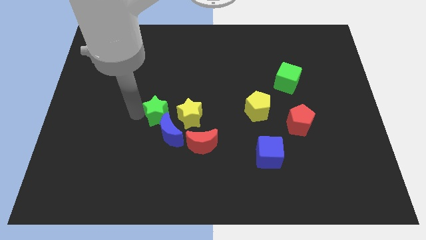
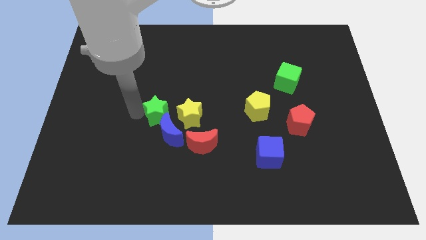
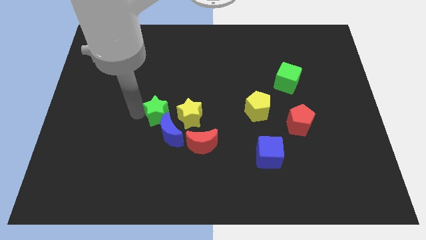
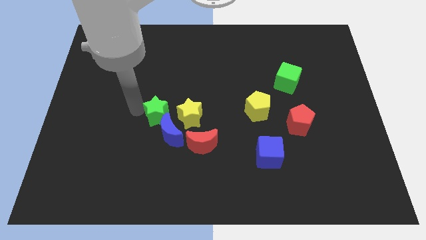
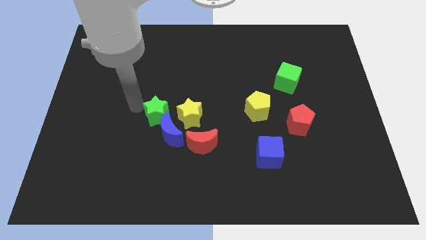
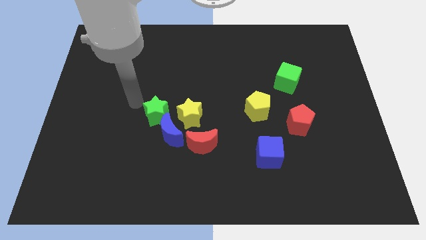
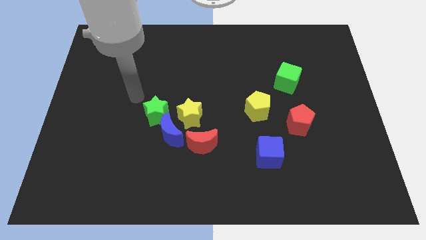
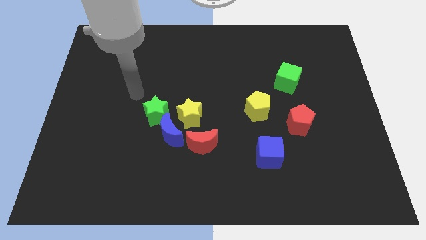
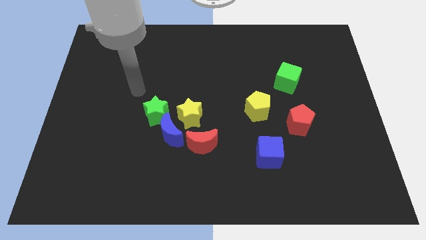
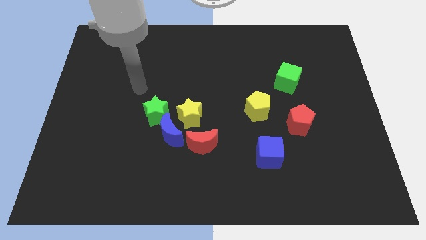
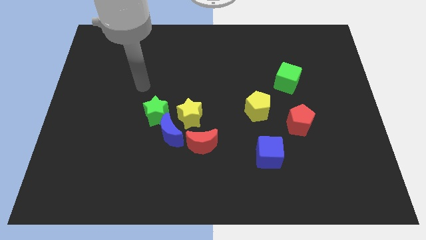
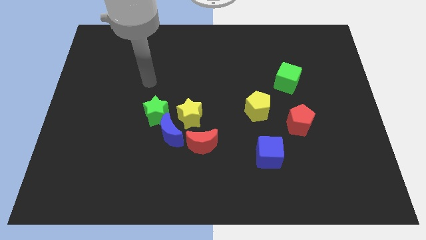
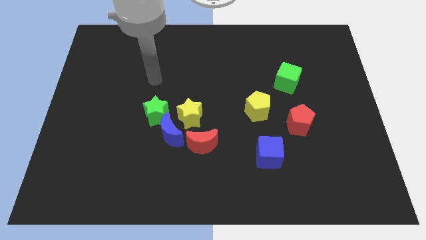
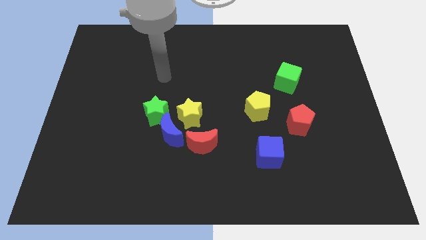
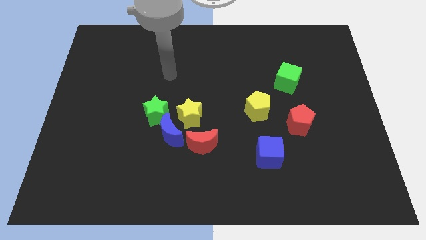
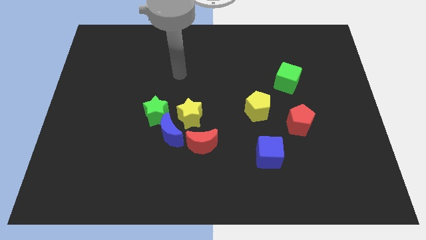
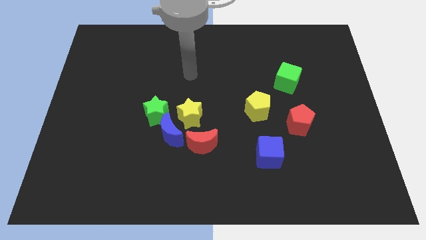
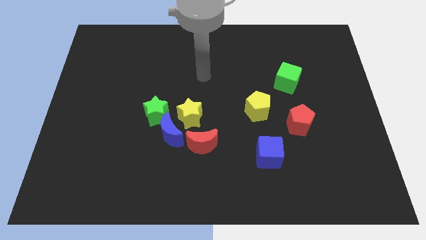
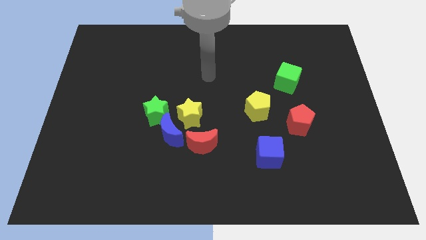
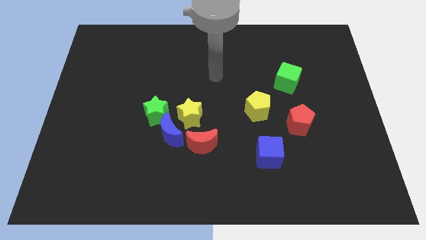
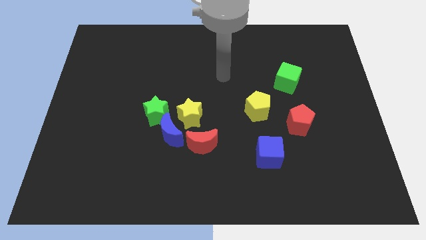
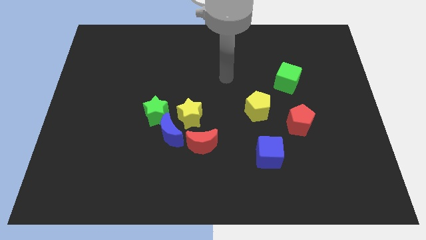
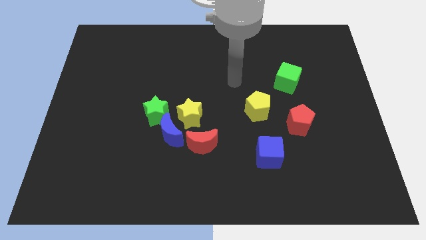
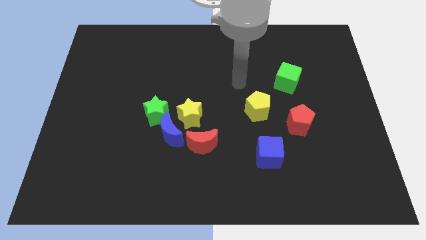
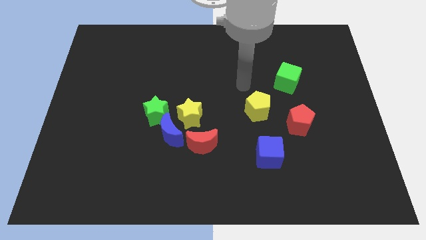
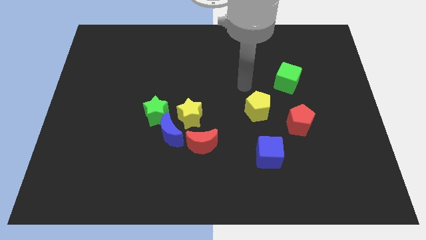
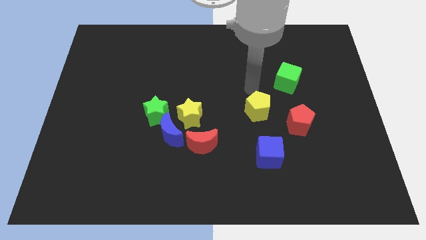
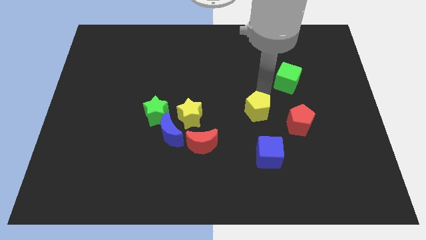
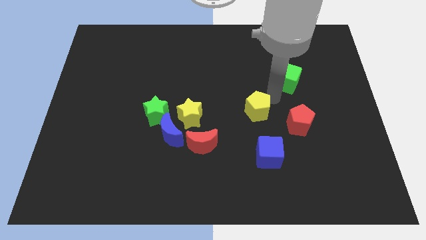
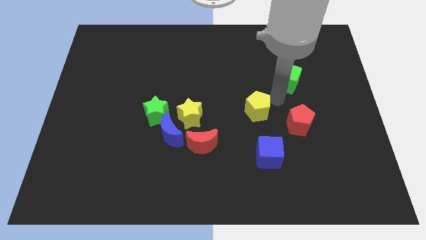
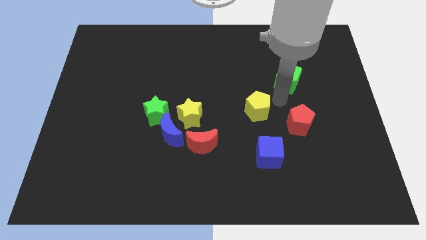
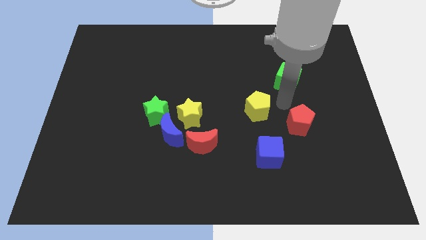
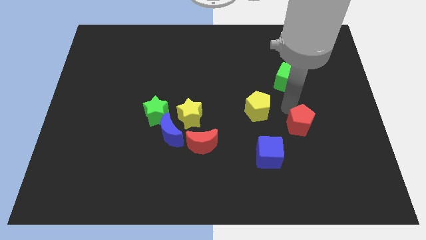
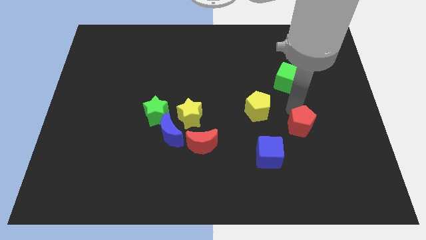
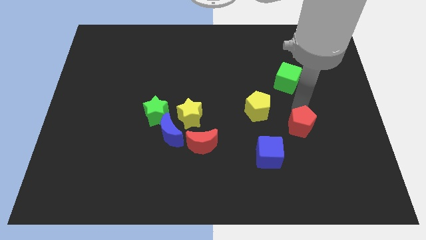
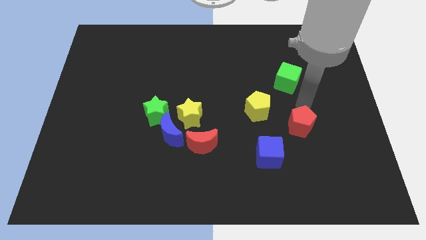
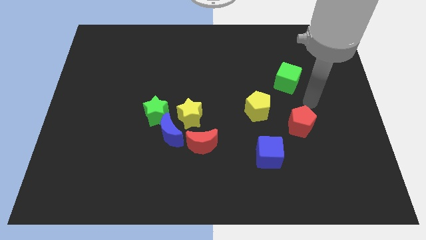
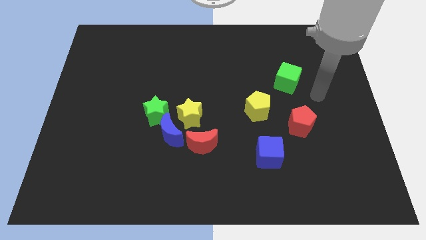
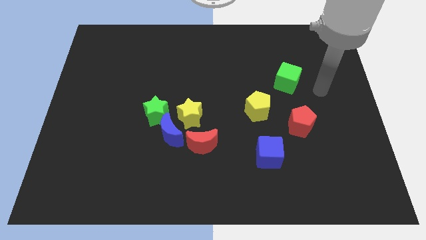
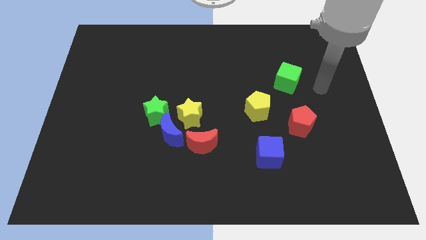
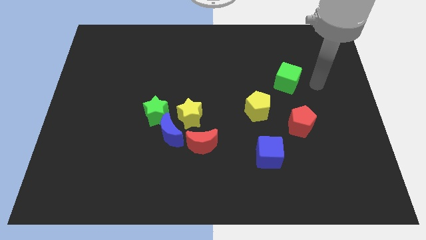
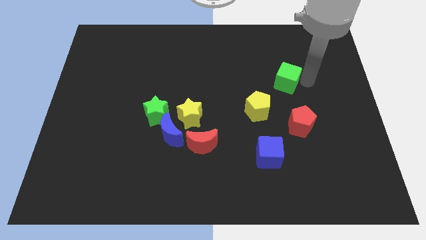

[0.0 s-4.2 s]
move your arm to the right of the green cube

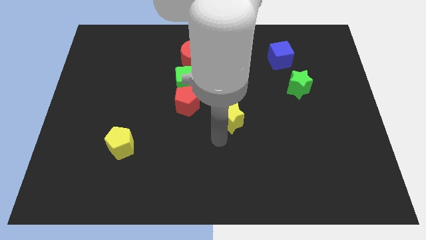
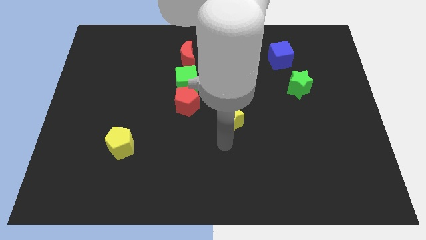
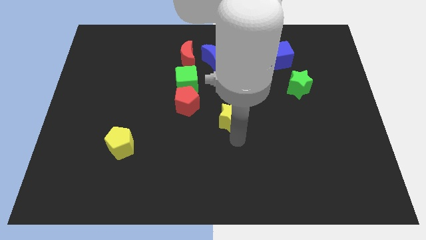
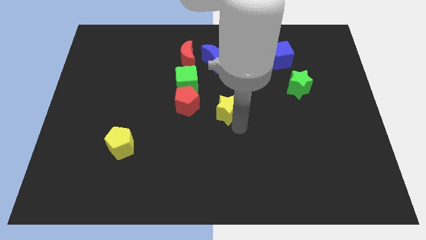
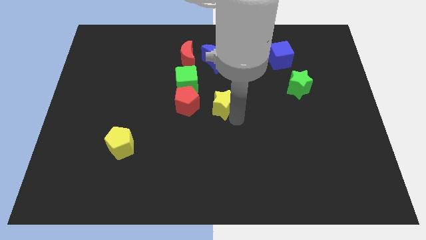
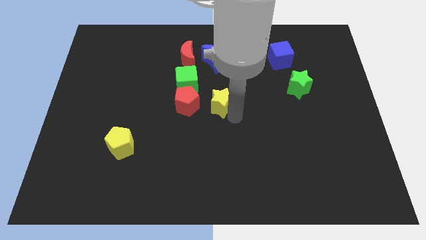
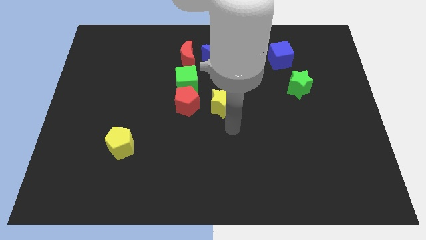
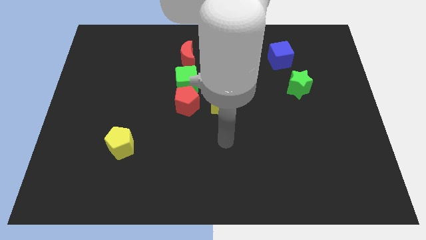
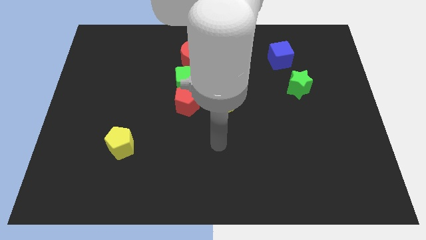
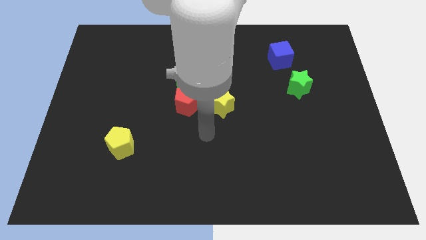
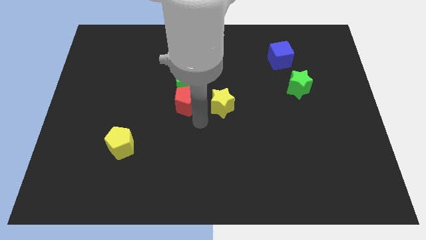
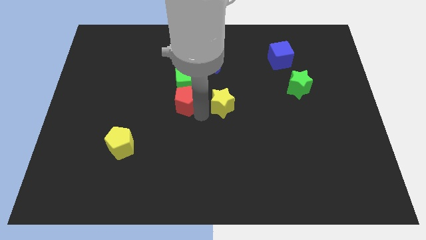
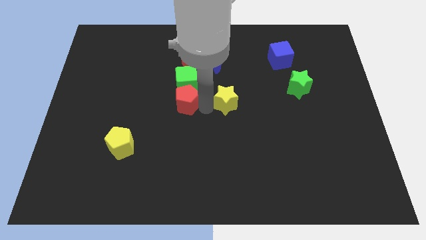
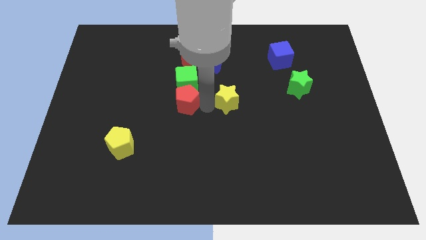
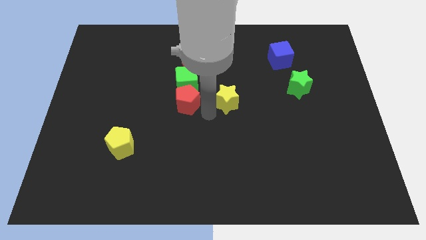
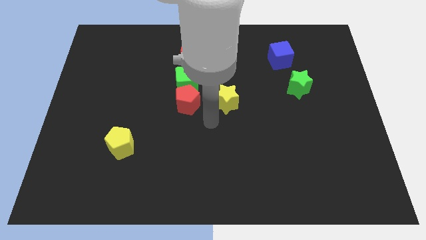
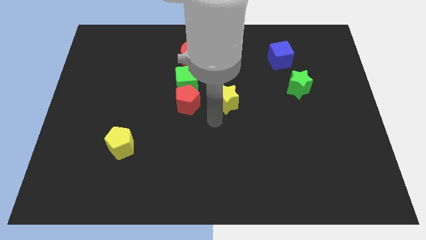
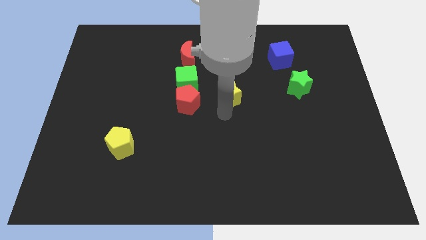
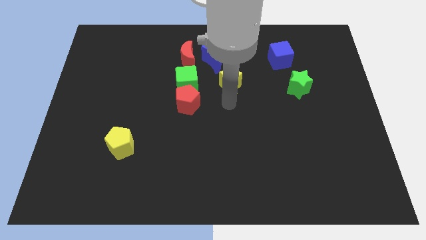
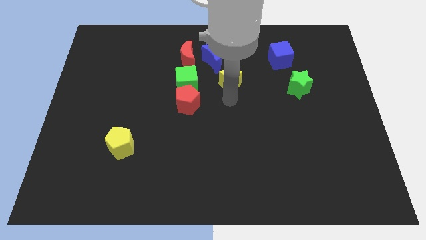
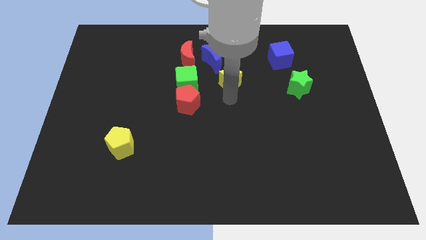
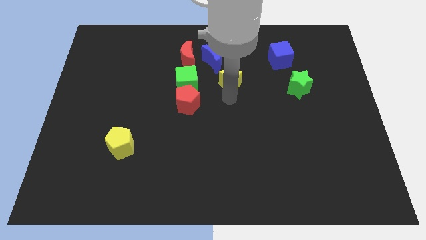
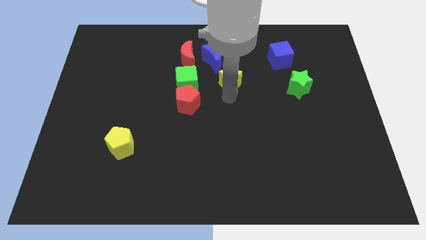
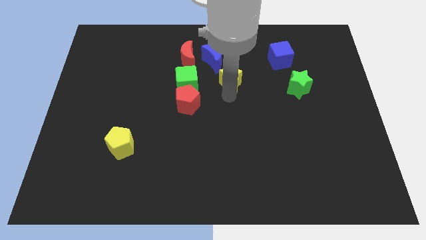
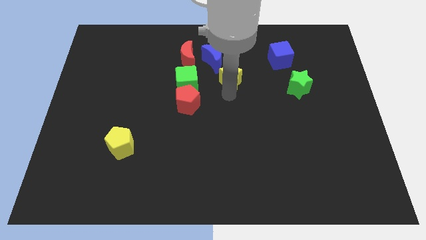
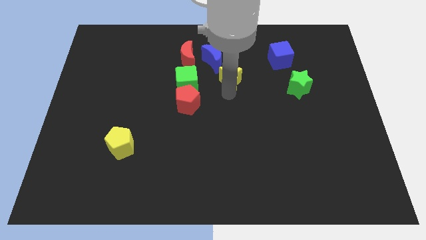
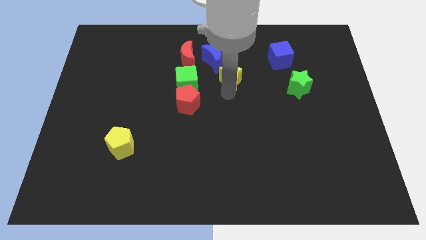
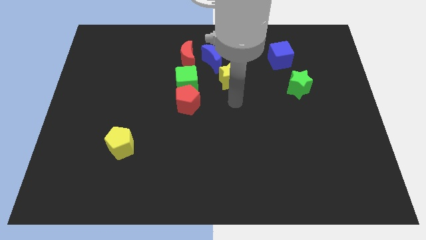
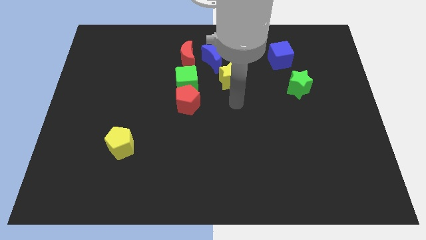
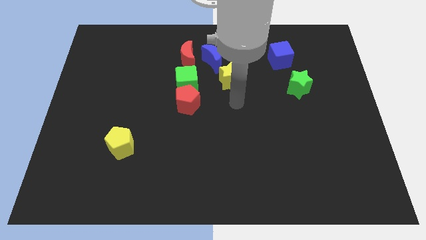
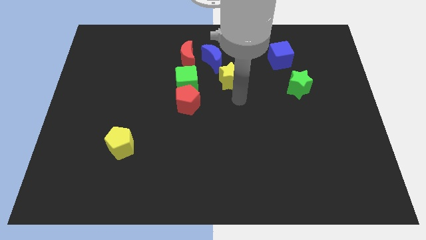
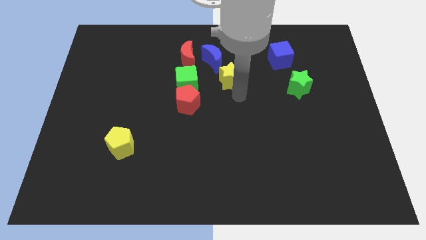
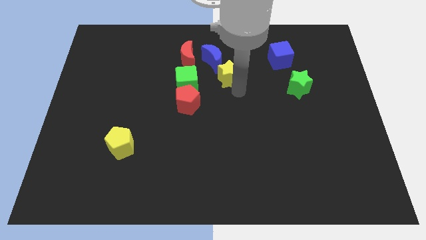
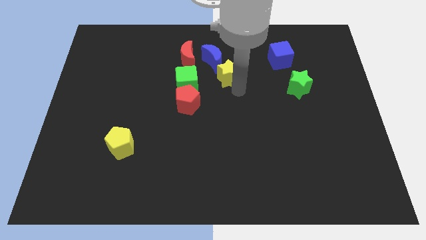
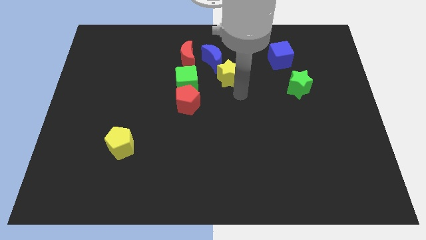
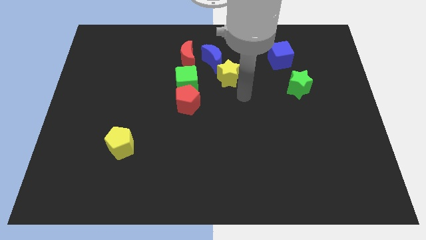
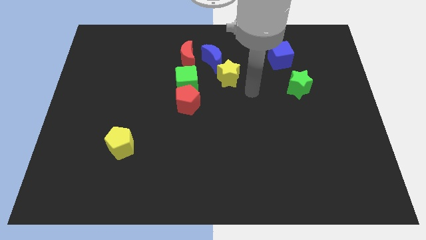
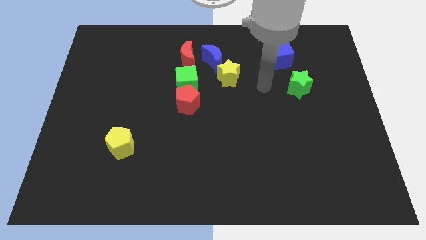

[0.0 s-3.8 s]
push the yellow star towards the blue crescent

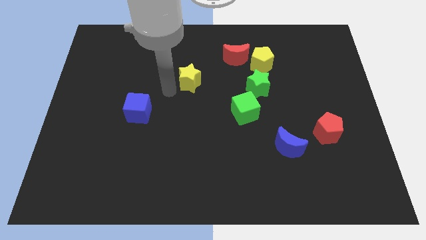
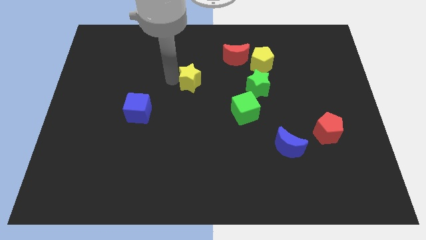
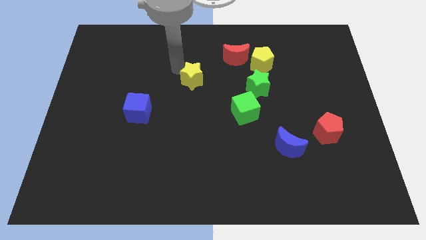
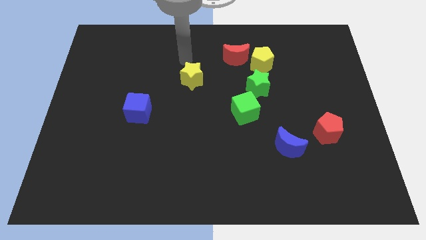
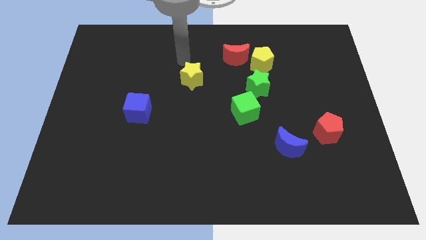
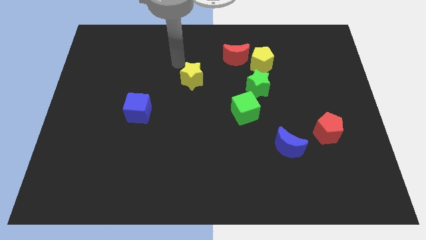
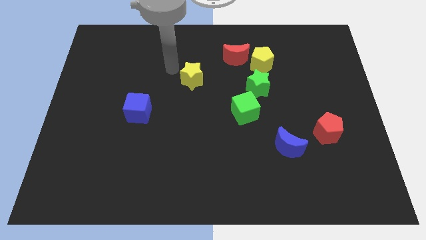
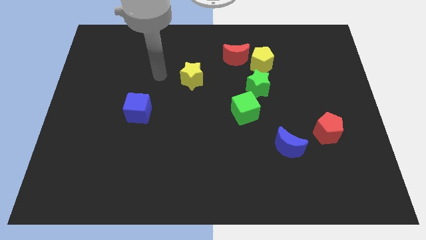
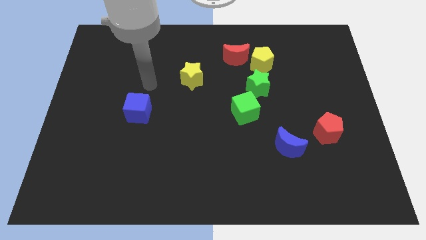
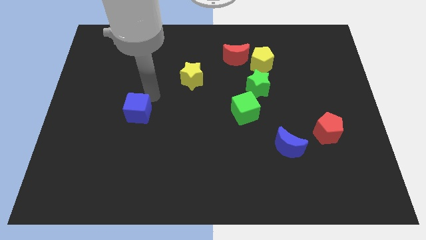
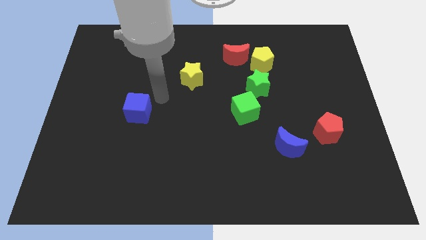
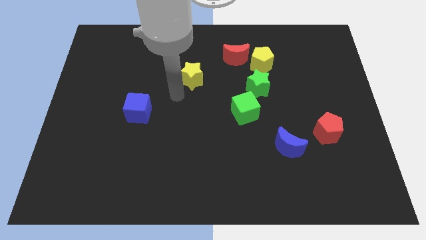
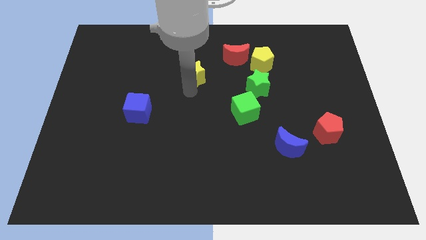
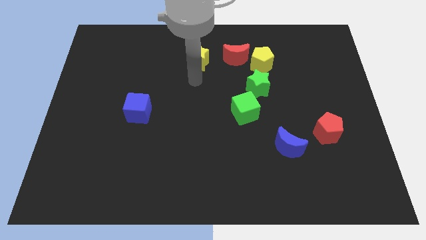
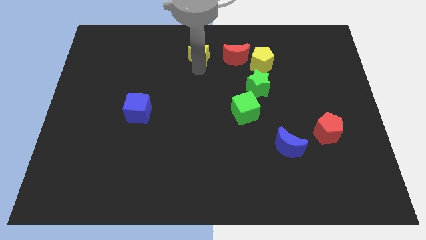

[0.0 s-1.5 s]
place the yellow star parallel to red moon
